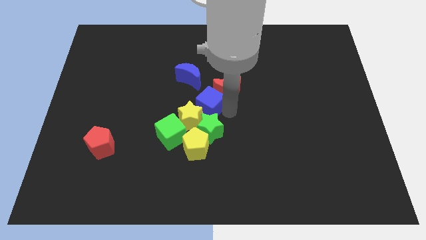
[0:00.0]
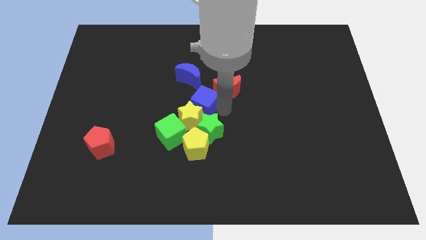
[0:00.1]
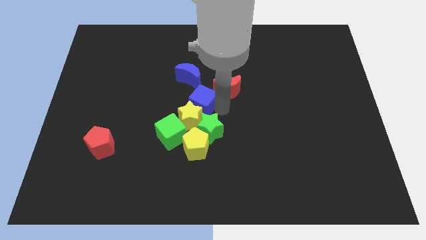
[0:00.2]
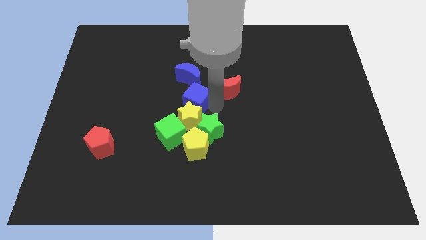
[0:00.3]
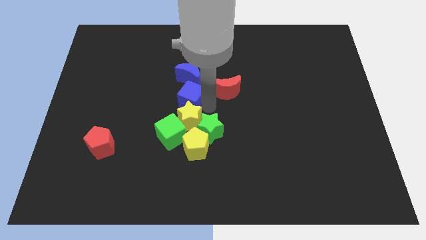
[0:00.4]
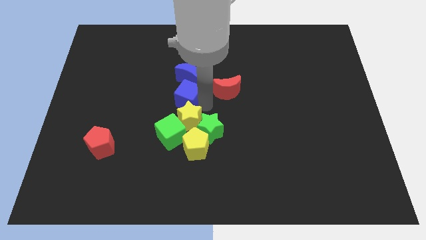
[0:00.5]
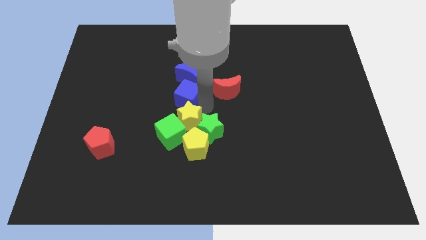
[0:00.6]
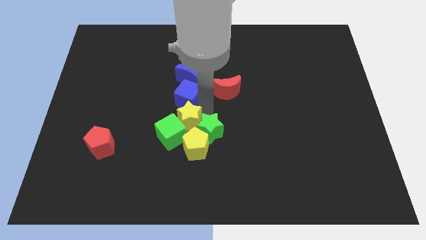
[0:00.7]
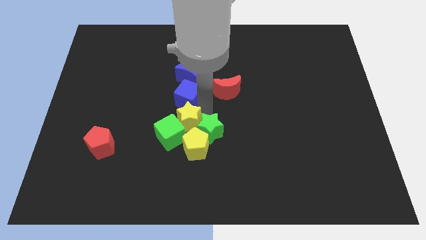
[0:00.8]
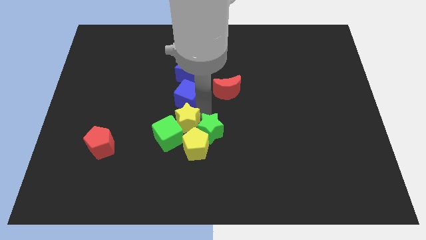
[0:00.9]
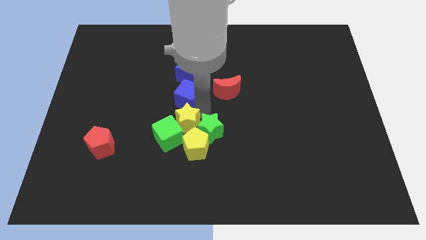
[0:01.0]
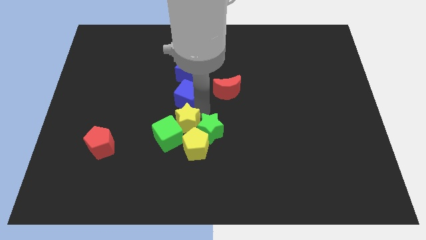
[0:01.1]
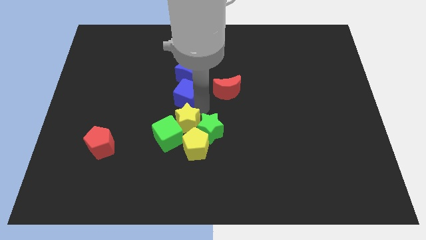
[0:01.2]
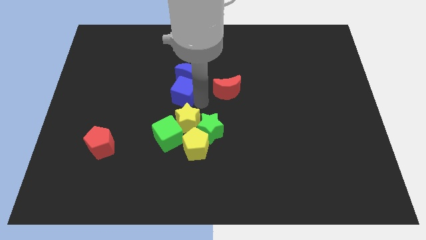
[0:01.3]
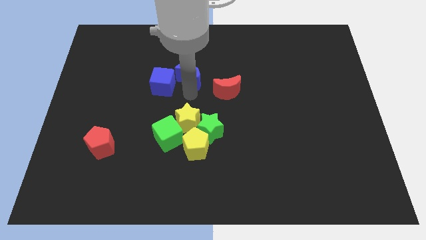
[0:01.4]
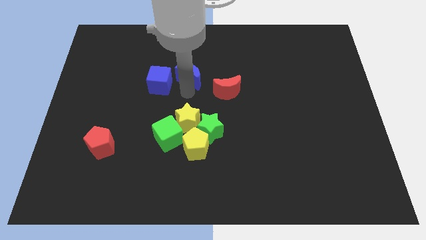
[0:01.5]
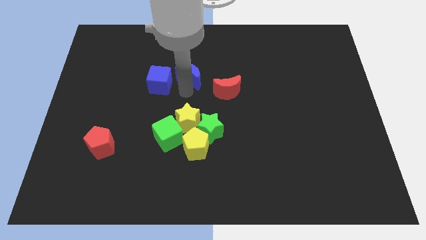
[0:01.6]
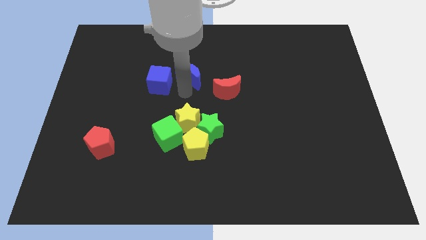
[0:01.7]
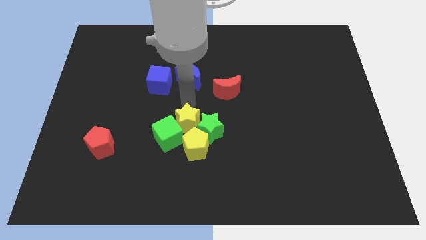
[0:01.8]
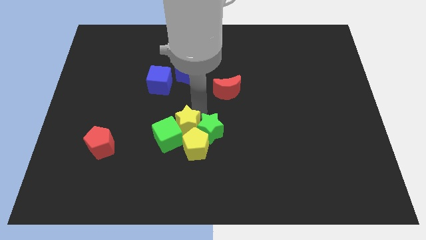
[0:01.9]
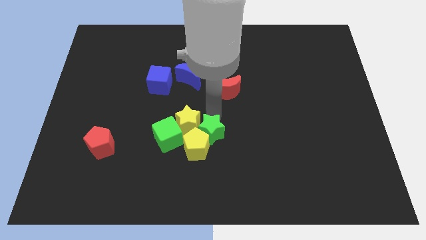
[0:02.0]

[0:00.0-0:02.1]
place blue cube to the left of blue moon

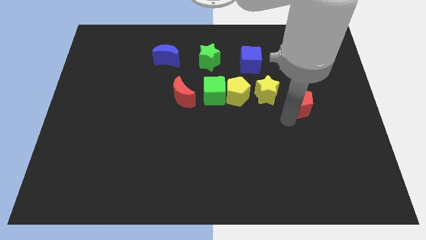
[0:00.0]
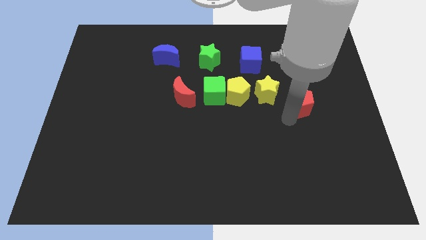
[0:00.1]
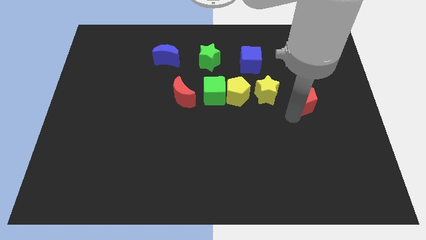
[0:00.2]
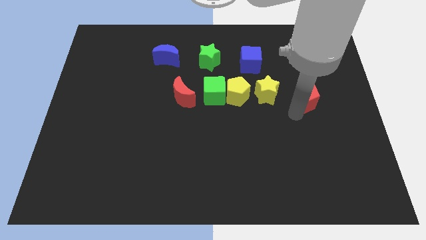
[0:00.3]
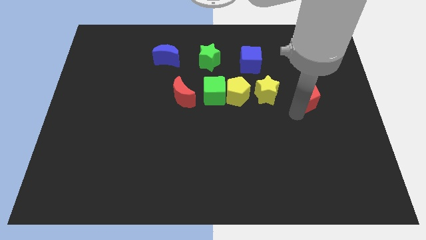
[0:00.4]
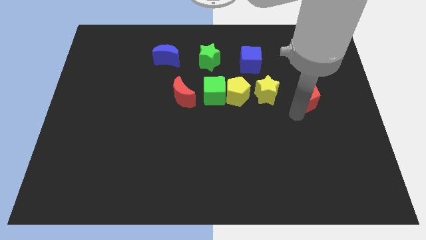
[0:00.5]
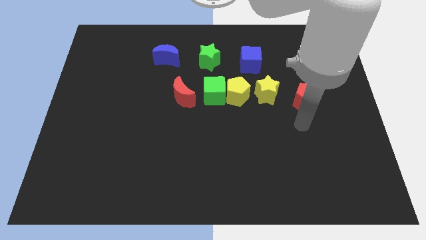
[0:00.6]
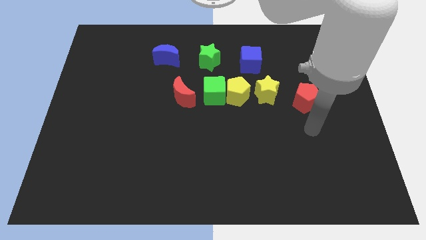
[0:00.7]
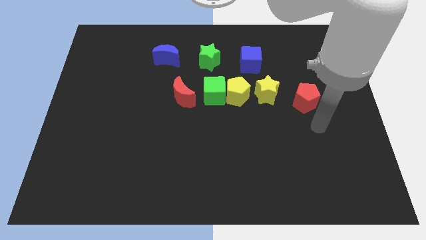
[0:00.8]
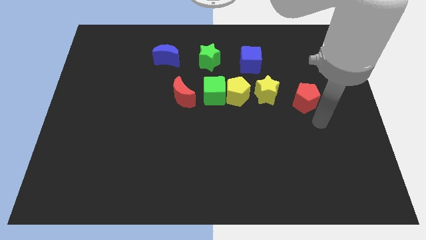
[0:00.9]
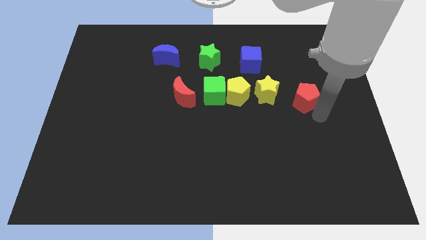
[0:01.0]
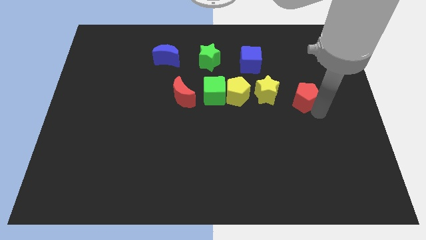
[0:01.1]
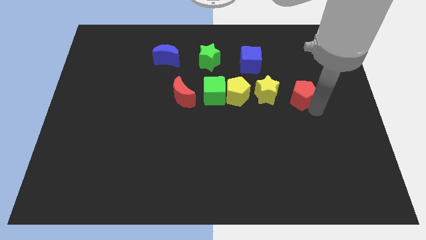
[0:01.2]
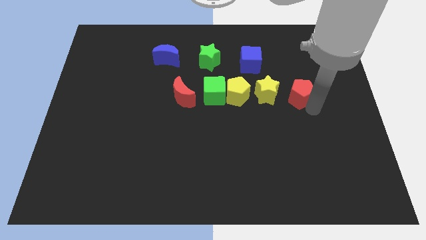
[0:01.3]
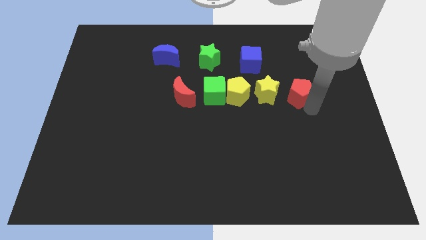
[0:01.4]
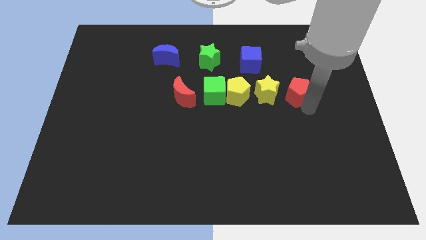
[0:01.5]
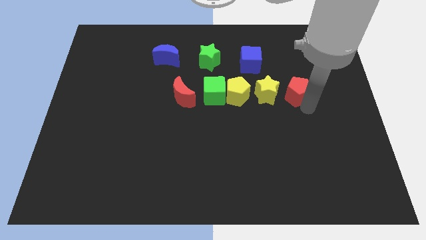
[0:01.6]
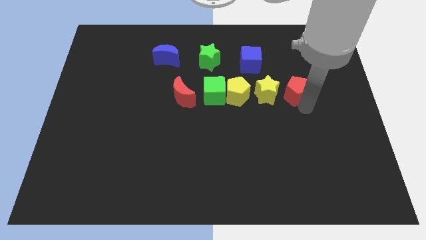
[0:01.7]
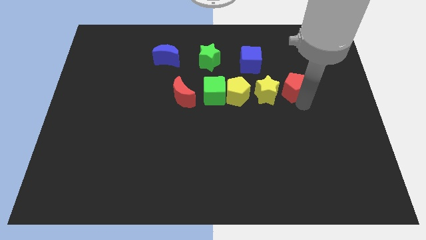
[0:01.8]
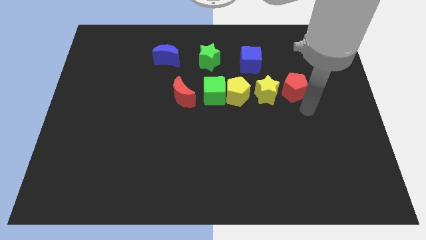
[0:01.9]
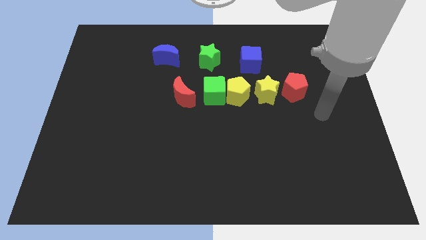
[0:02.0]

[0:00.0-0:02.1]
place the red pentagon to the right of the yellow star

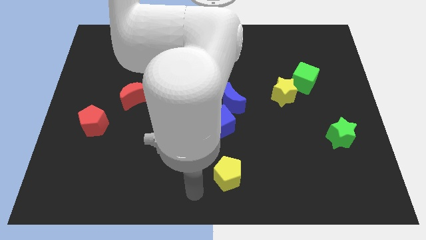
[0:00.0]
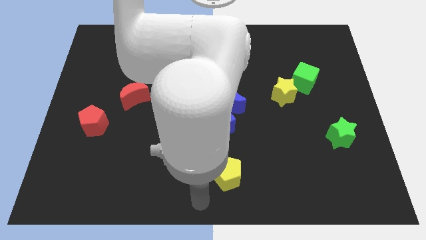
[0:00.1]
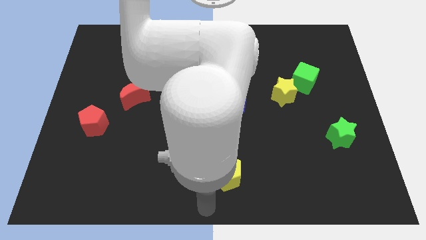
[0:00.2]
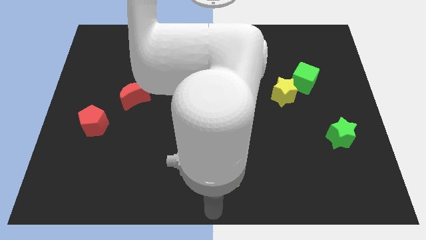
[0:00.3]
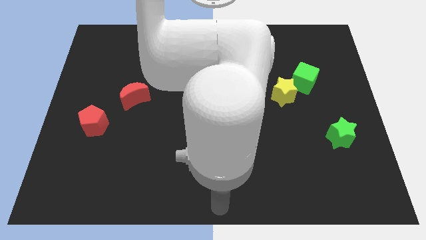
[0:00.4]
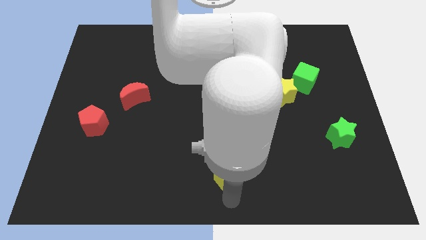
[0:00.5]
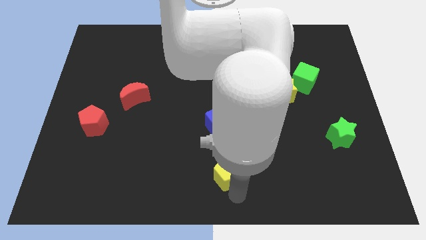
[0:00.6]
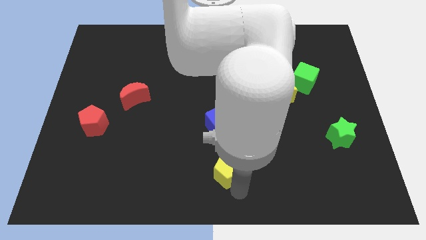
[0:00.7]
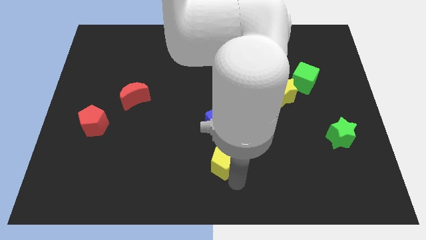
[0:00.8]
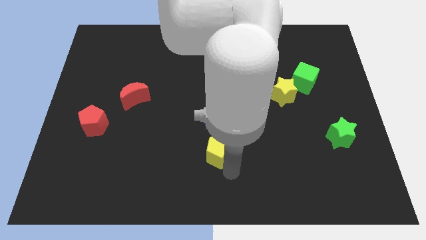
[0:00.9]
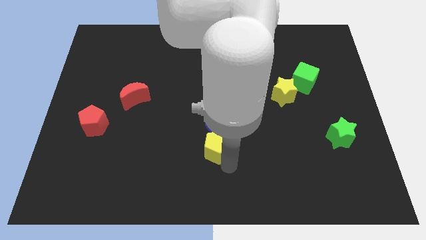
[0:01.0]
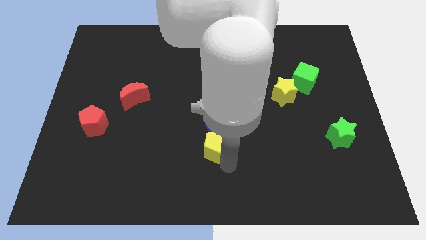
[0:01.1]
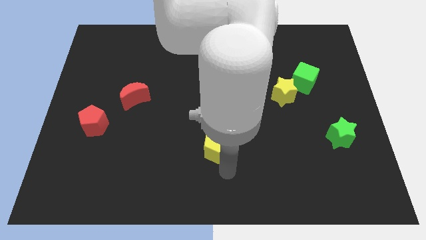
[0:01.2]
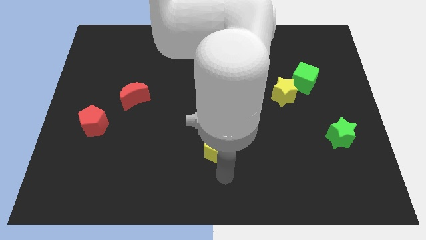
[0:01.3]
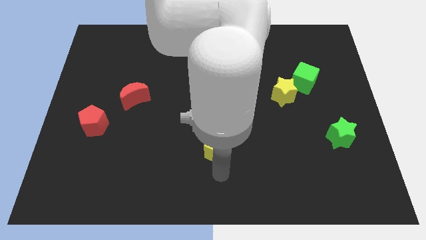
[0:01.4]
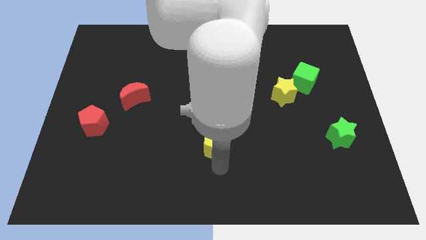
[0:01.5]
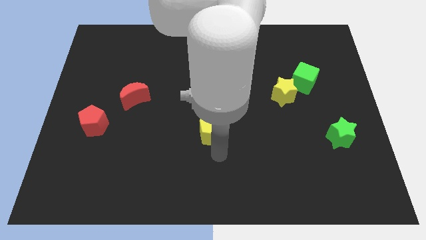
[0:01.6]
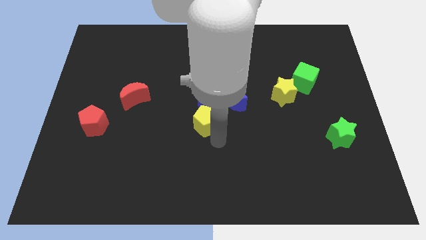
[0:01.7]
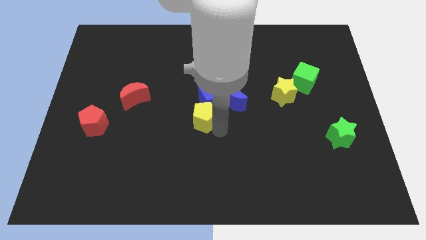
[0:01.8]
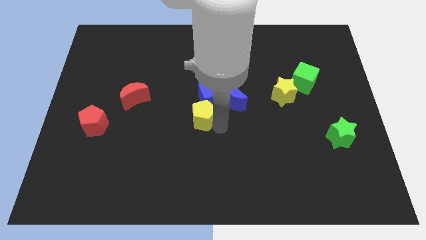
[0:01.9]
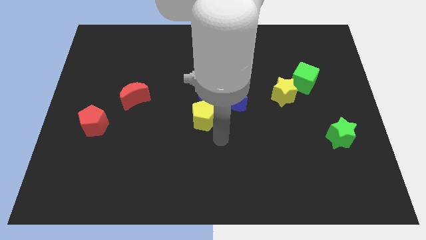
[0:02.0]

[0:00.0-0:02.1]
push the yellow pentagon into blue cube

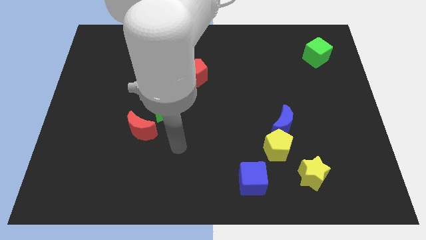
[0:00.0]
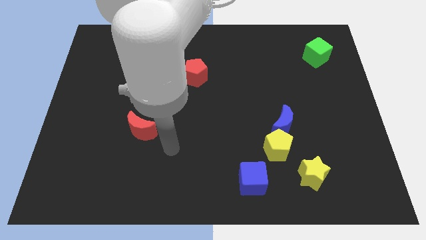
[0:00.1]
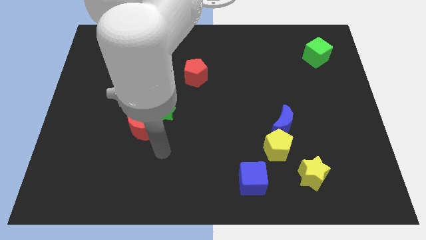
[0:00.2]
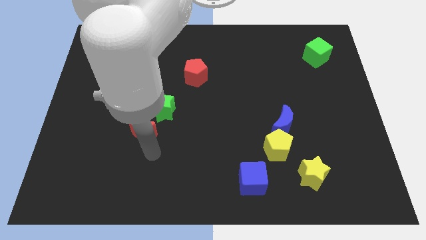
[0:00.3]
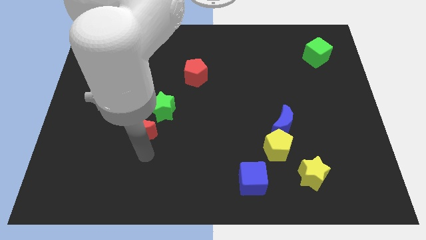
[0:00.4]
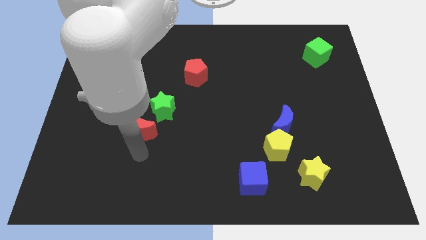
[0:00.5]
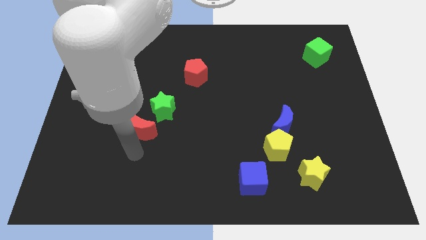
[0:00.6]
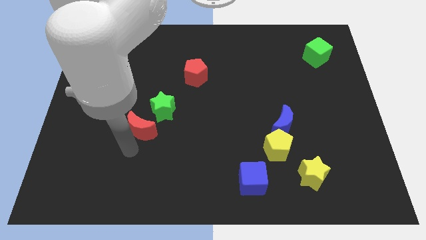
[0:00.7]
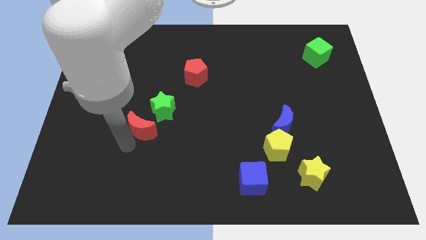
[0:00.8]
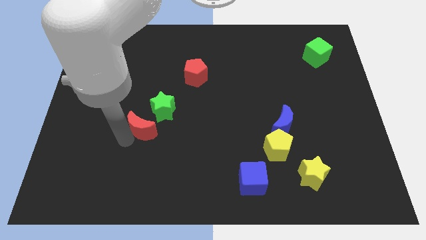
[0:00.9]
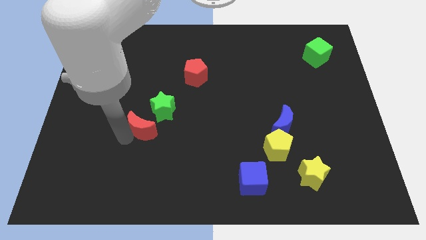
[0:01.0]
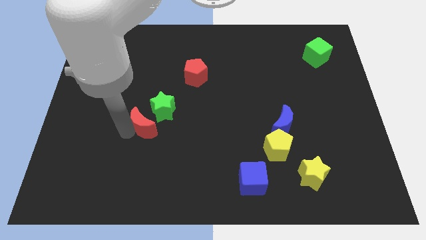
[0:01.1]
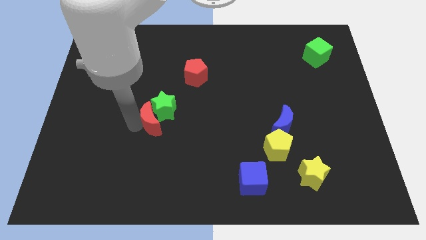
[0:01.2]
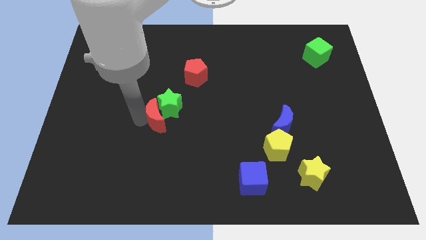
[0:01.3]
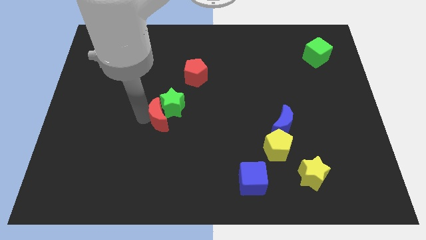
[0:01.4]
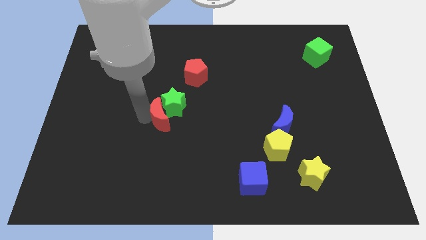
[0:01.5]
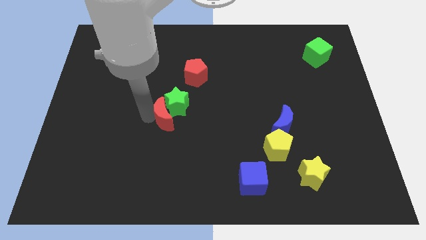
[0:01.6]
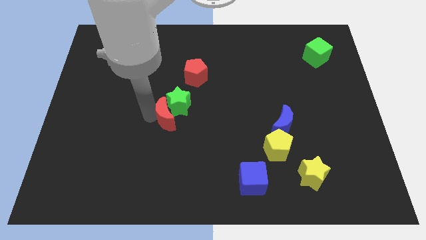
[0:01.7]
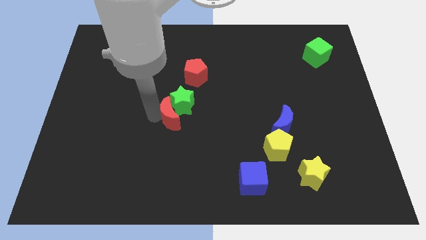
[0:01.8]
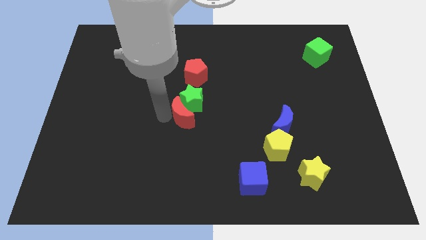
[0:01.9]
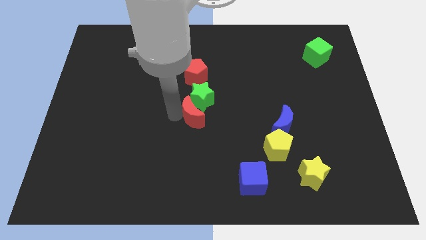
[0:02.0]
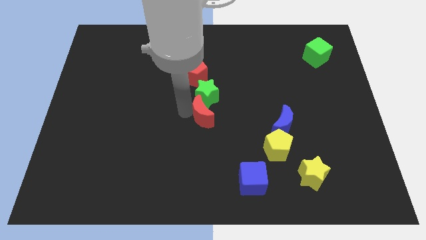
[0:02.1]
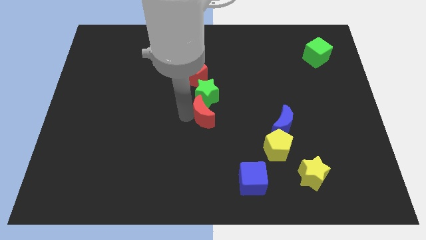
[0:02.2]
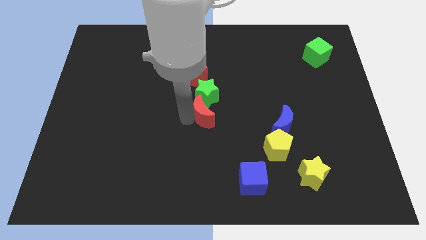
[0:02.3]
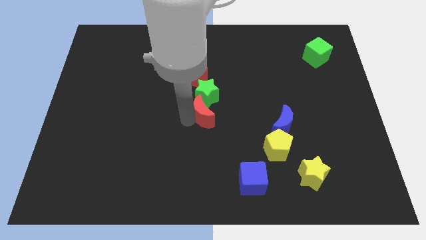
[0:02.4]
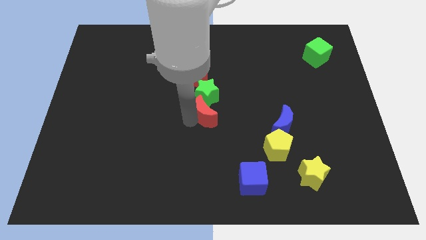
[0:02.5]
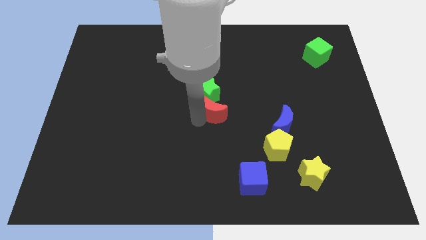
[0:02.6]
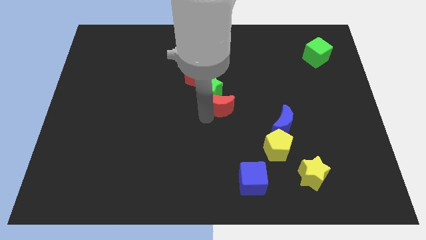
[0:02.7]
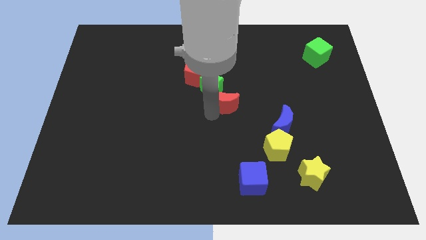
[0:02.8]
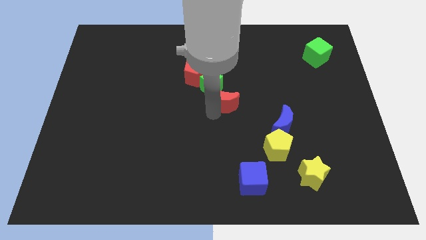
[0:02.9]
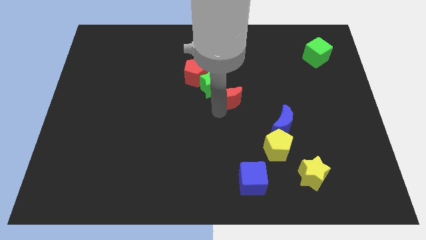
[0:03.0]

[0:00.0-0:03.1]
move green star and red moon right below the red pentagon
